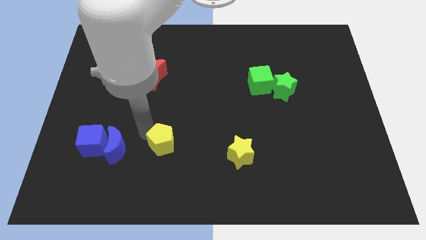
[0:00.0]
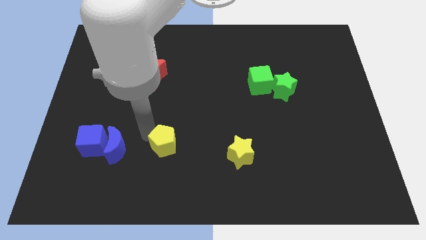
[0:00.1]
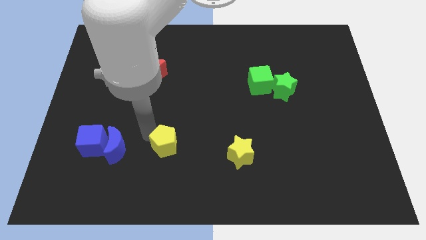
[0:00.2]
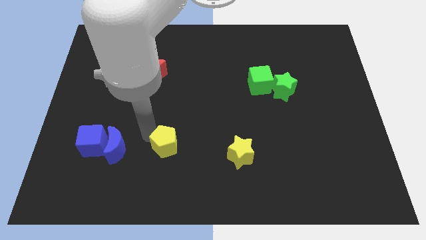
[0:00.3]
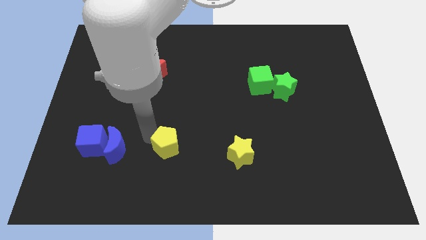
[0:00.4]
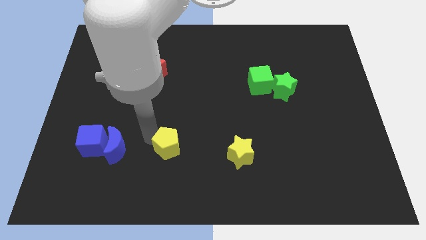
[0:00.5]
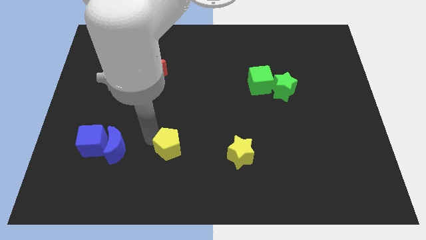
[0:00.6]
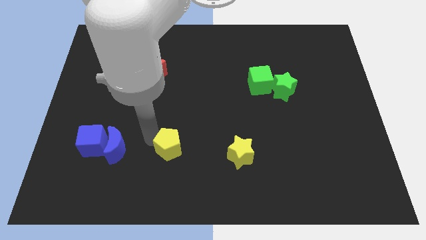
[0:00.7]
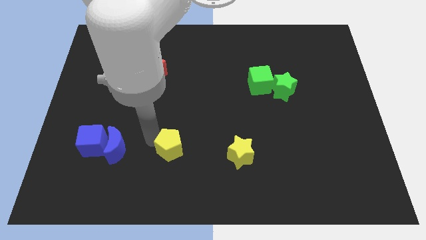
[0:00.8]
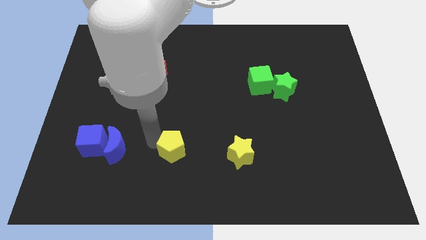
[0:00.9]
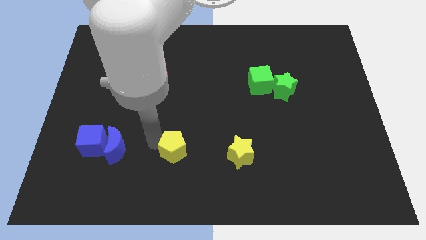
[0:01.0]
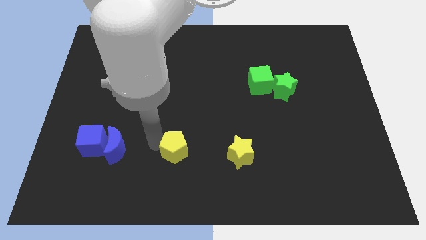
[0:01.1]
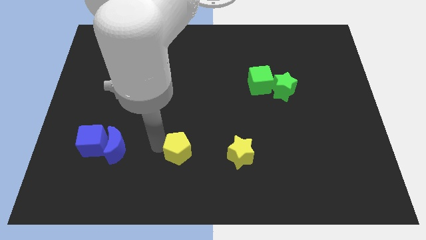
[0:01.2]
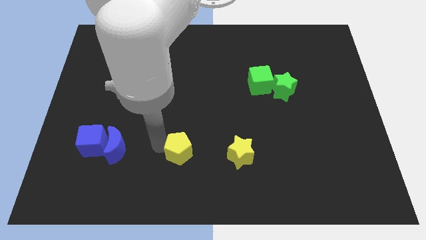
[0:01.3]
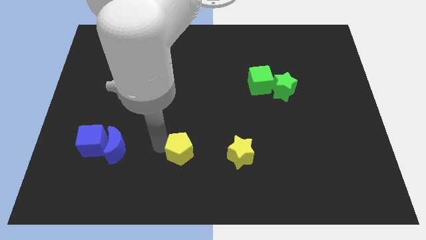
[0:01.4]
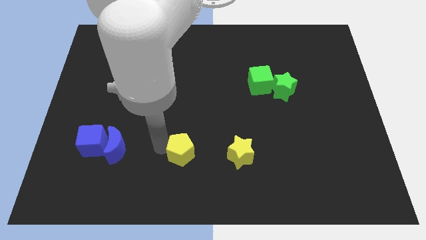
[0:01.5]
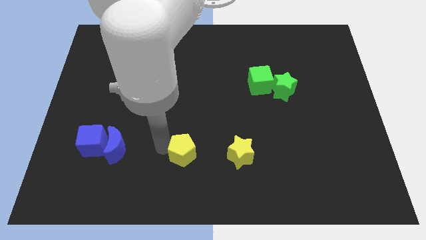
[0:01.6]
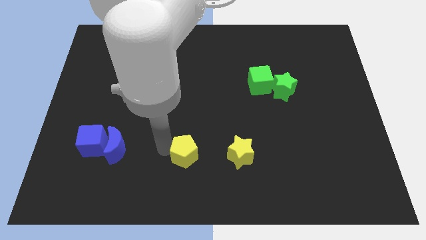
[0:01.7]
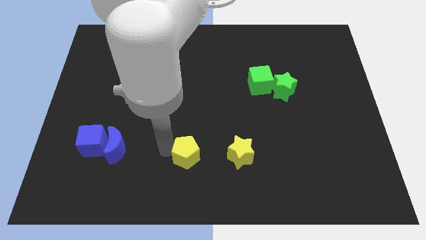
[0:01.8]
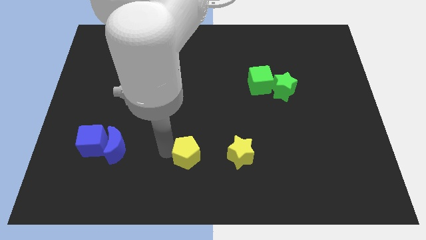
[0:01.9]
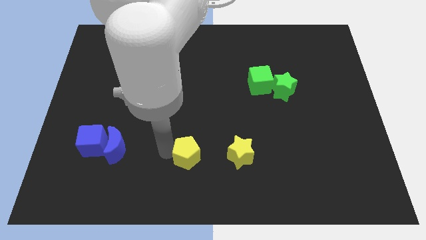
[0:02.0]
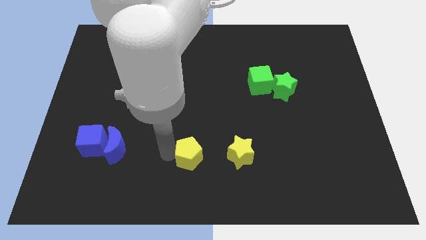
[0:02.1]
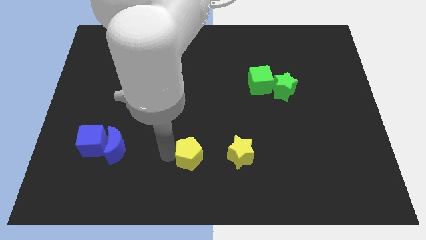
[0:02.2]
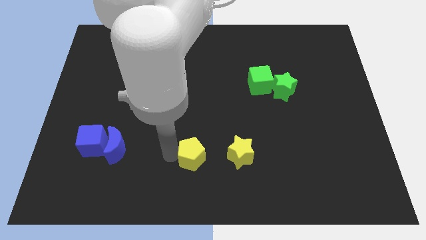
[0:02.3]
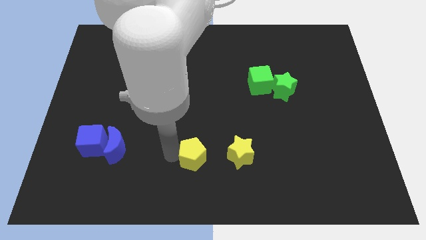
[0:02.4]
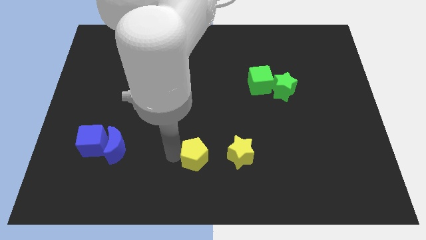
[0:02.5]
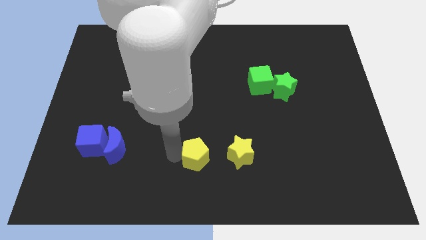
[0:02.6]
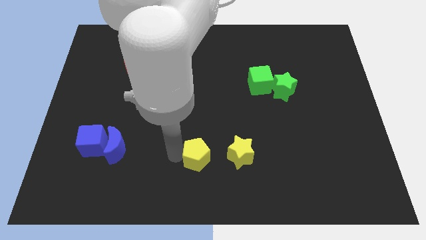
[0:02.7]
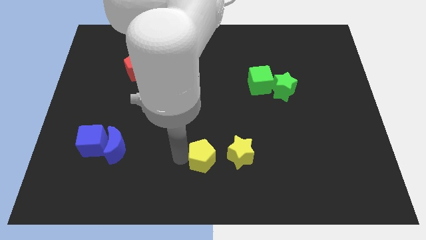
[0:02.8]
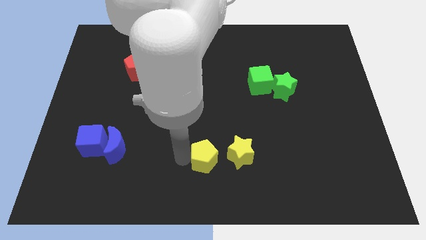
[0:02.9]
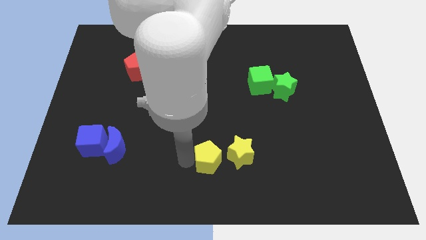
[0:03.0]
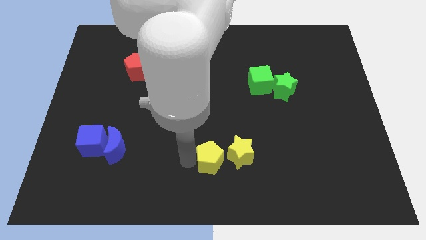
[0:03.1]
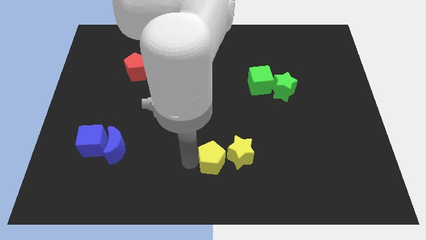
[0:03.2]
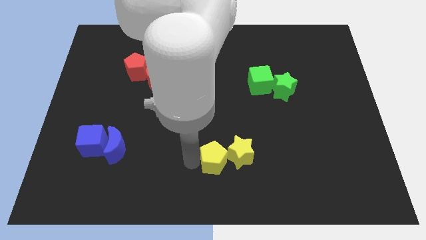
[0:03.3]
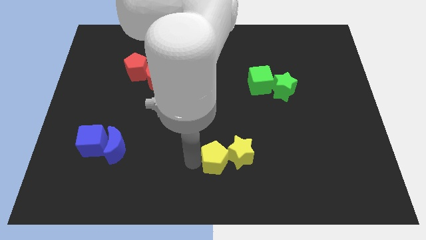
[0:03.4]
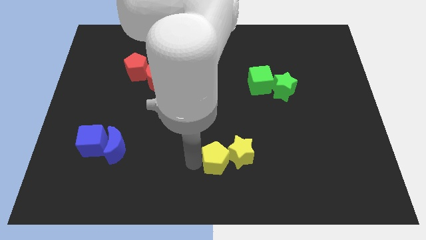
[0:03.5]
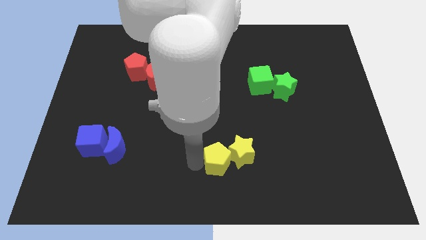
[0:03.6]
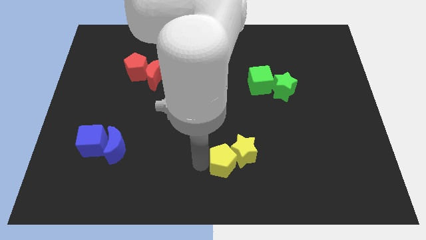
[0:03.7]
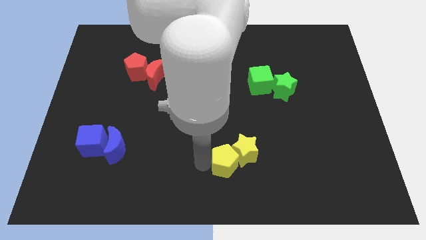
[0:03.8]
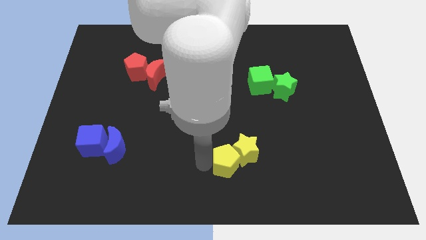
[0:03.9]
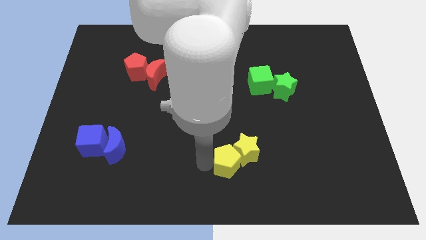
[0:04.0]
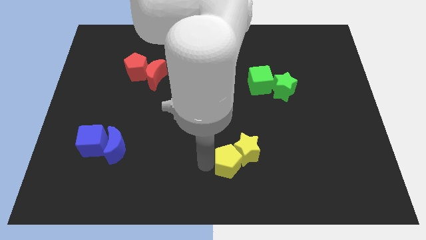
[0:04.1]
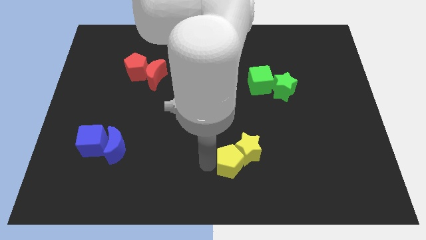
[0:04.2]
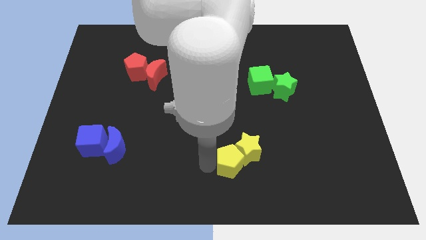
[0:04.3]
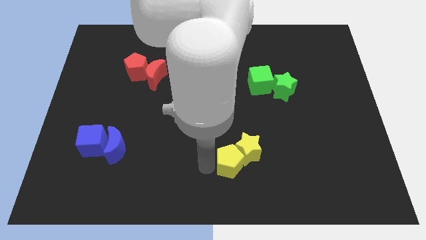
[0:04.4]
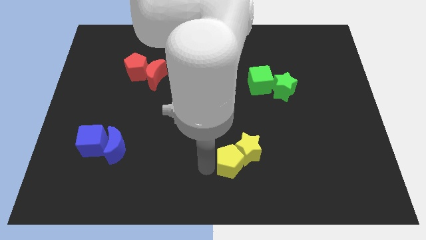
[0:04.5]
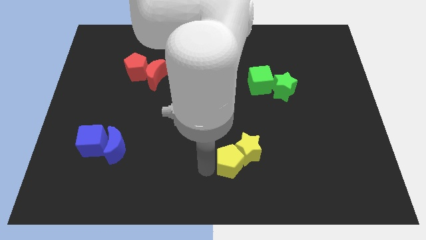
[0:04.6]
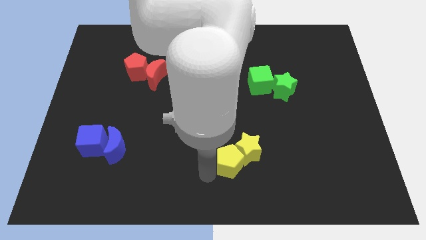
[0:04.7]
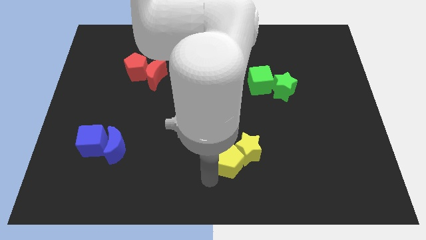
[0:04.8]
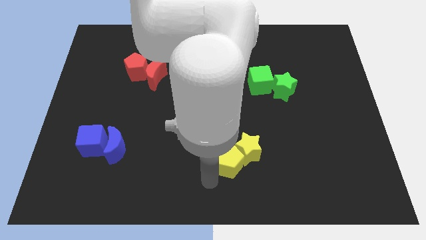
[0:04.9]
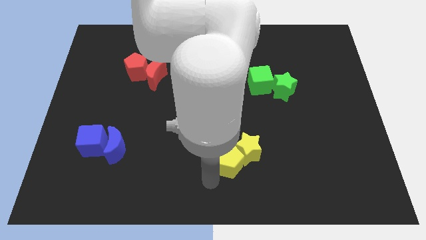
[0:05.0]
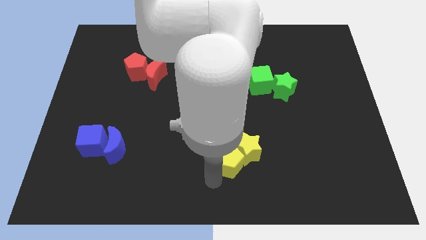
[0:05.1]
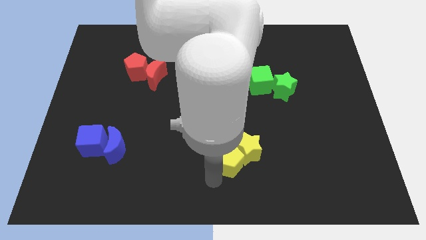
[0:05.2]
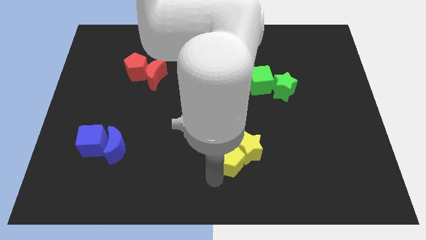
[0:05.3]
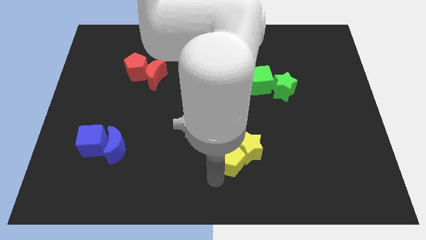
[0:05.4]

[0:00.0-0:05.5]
push the yellow pentagon into the yellow star

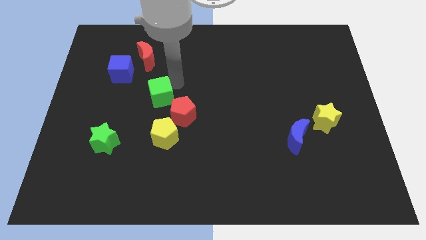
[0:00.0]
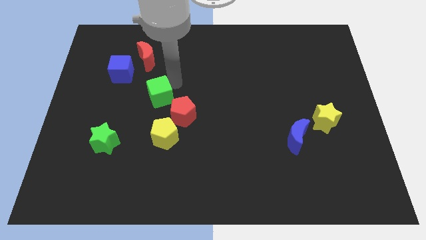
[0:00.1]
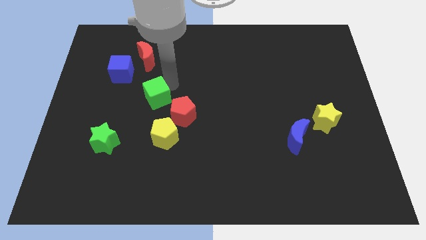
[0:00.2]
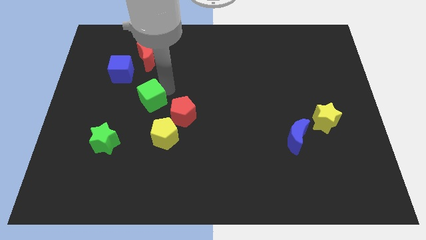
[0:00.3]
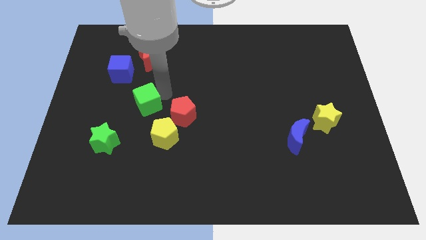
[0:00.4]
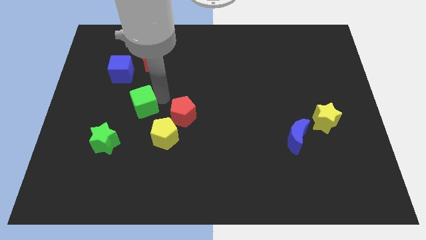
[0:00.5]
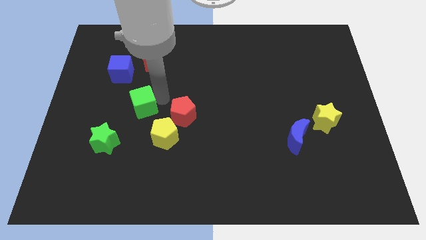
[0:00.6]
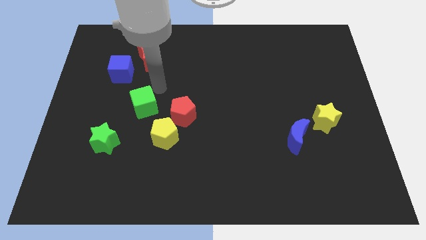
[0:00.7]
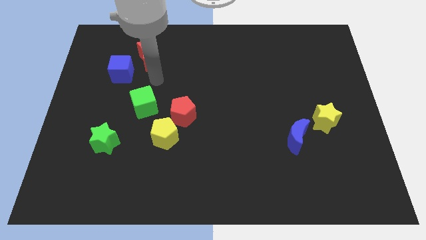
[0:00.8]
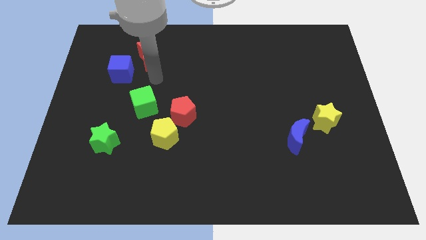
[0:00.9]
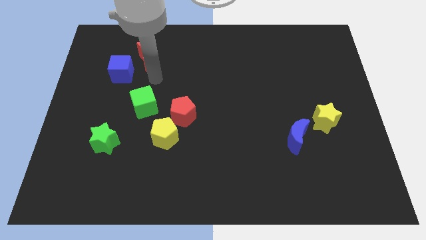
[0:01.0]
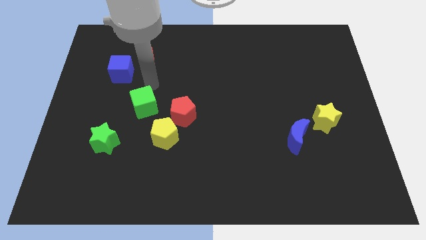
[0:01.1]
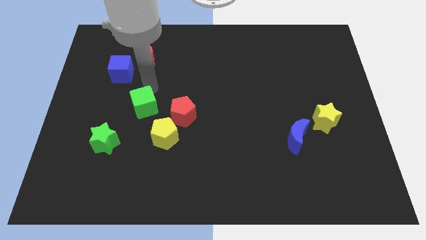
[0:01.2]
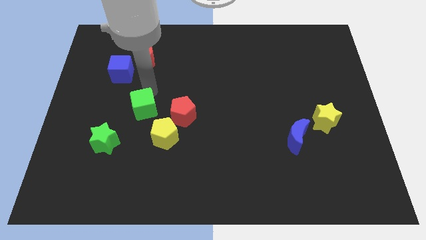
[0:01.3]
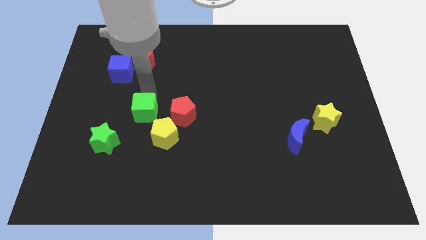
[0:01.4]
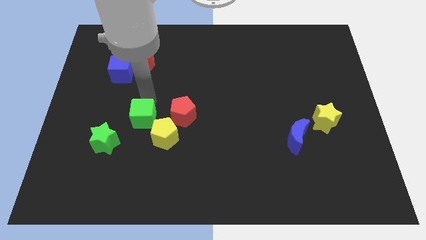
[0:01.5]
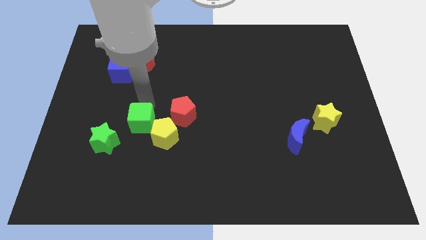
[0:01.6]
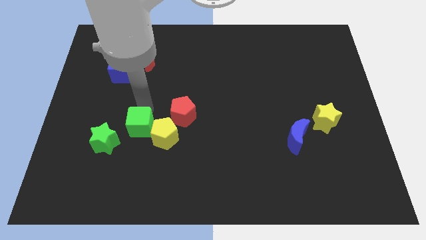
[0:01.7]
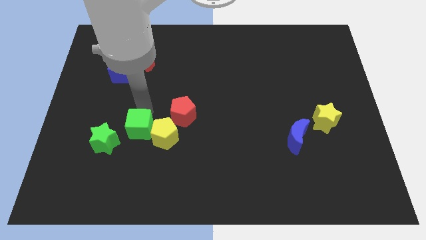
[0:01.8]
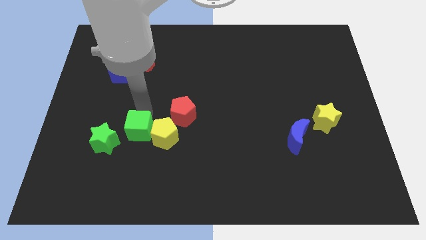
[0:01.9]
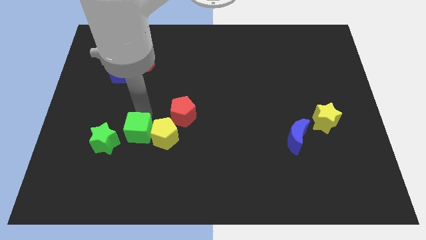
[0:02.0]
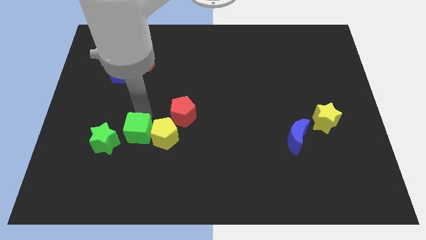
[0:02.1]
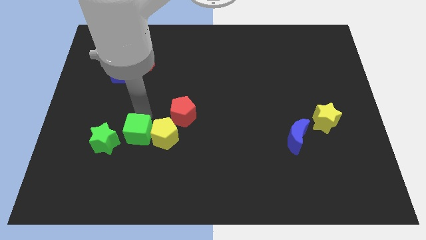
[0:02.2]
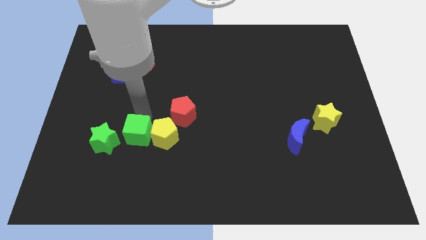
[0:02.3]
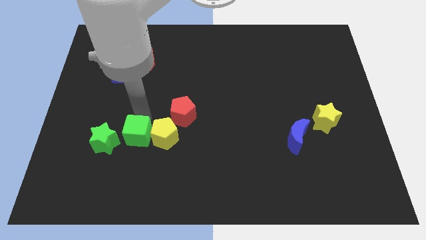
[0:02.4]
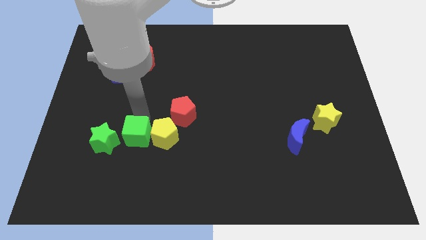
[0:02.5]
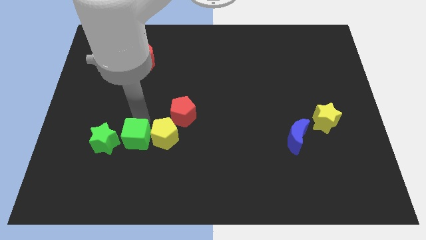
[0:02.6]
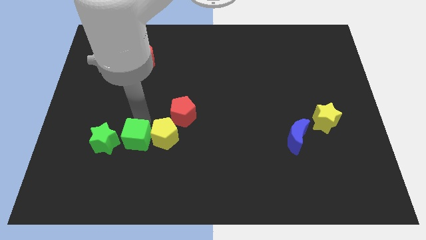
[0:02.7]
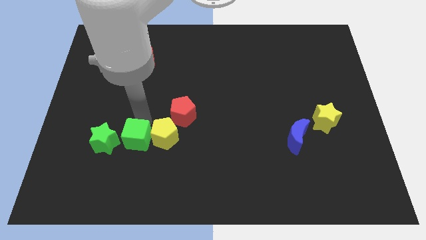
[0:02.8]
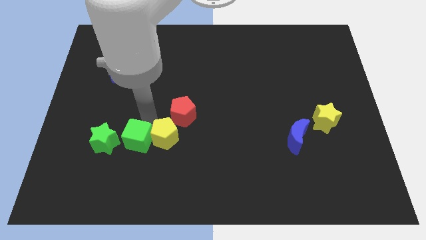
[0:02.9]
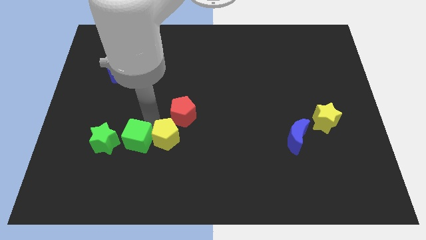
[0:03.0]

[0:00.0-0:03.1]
put the green cube in between the green star and yellow pentagon

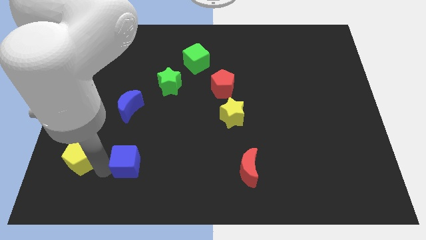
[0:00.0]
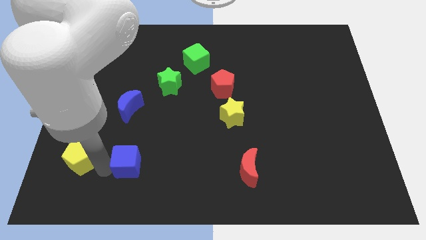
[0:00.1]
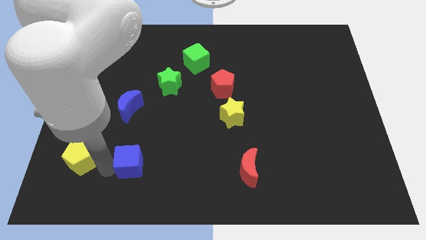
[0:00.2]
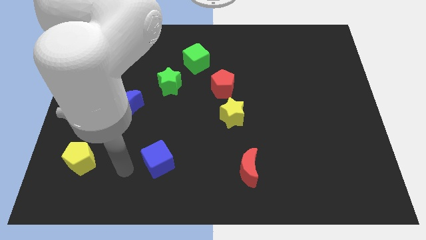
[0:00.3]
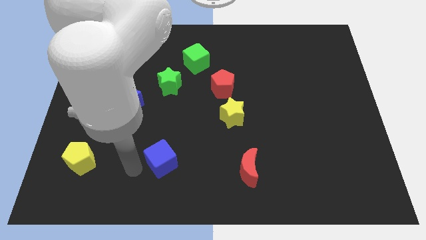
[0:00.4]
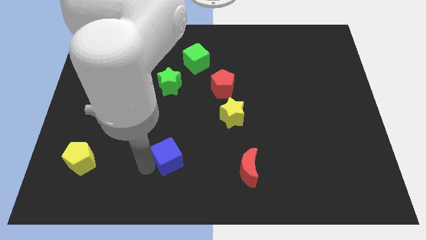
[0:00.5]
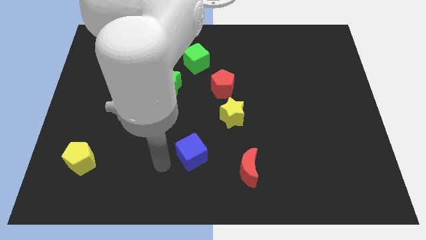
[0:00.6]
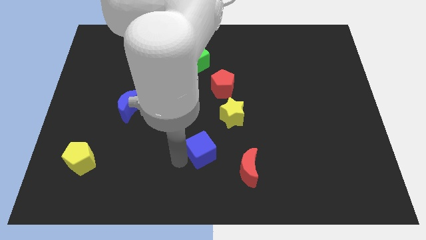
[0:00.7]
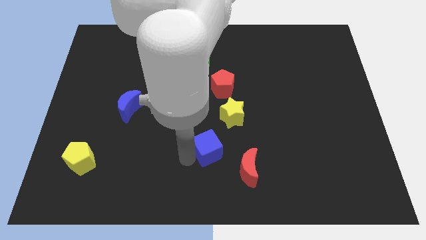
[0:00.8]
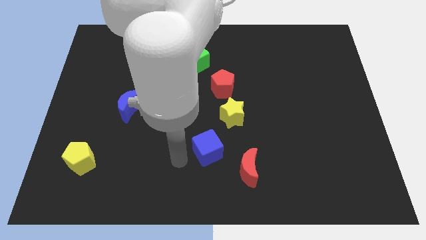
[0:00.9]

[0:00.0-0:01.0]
place blue cube diagonally to the yellow star
